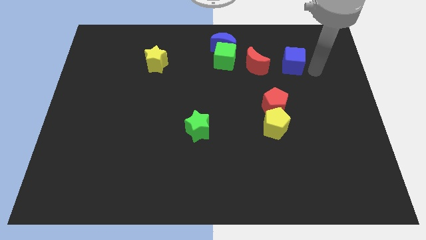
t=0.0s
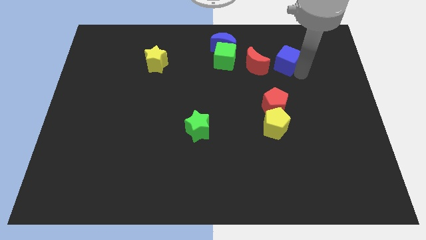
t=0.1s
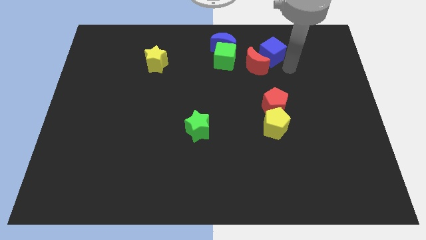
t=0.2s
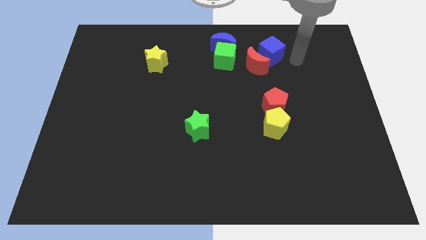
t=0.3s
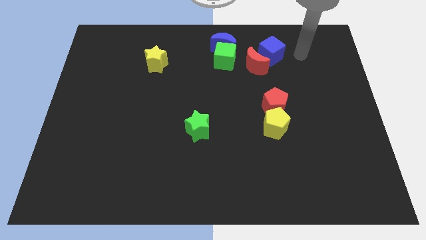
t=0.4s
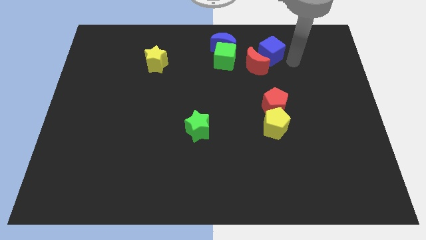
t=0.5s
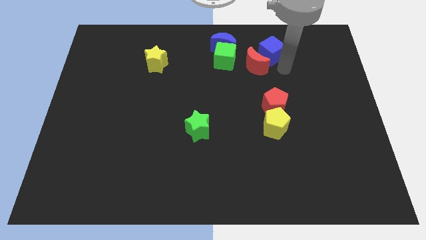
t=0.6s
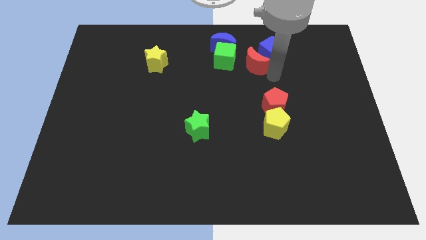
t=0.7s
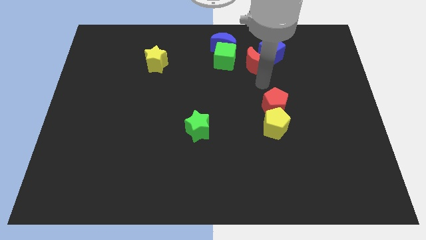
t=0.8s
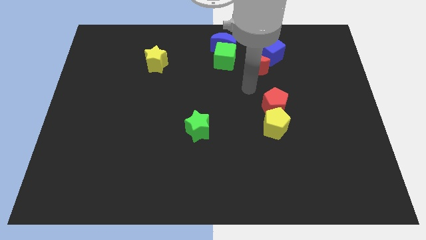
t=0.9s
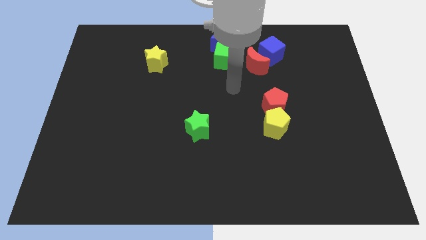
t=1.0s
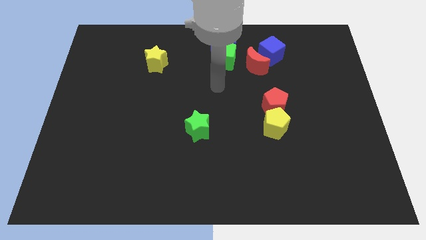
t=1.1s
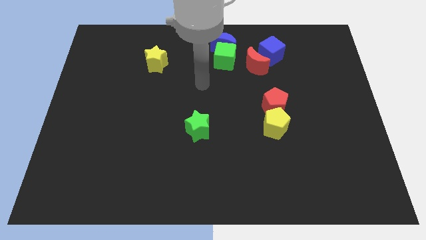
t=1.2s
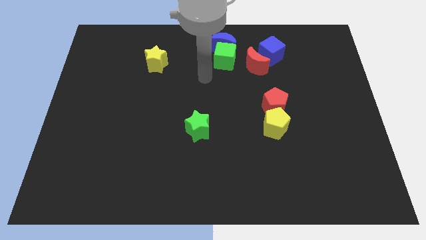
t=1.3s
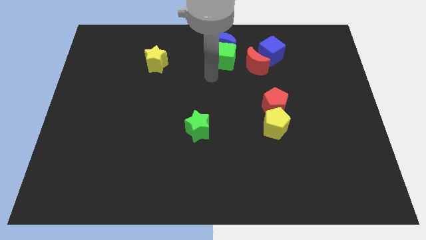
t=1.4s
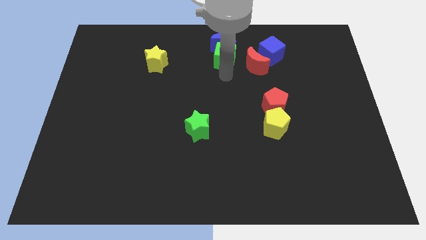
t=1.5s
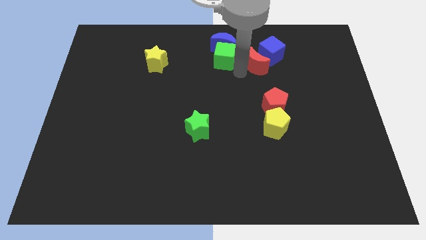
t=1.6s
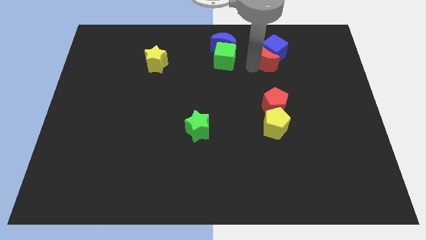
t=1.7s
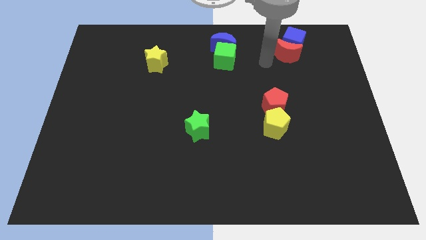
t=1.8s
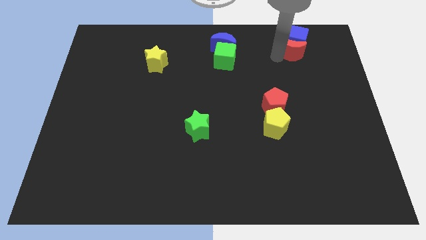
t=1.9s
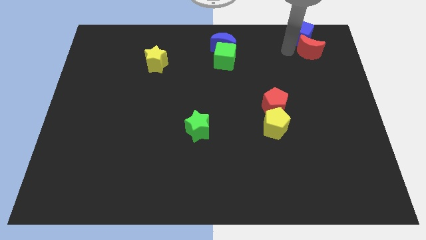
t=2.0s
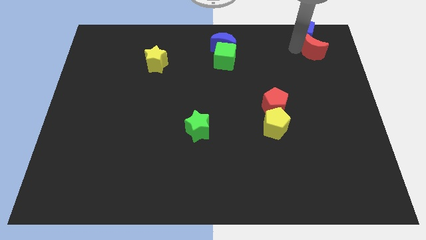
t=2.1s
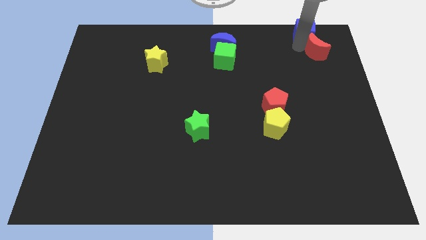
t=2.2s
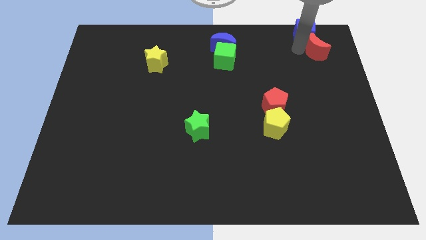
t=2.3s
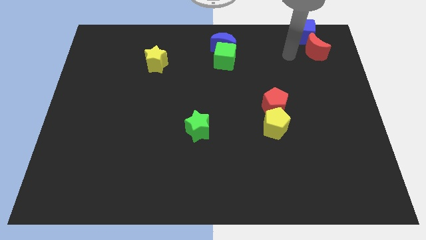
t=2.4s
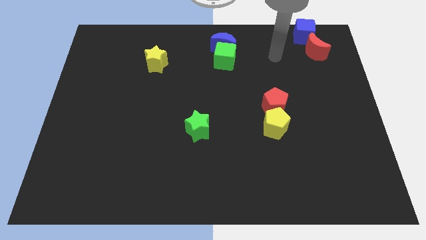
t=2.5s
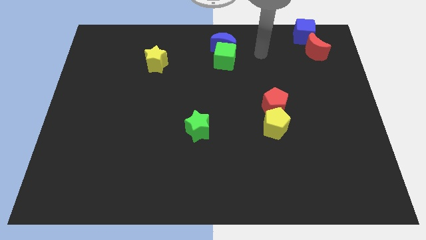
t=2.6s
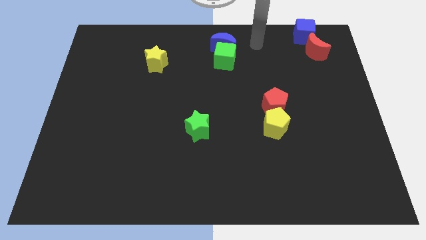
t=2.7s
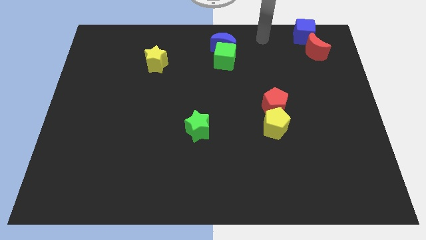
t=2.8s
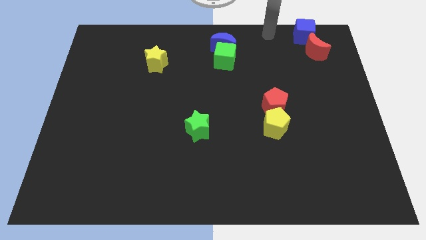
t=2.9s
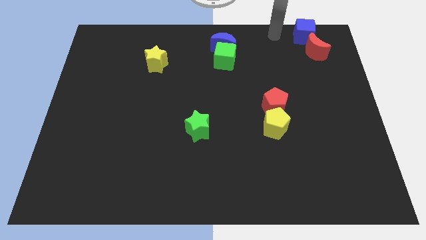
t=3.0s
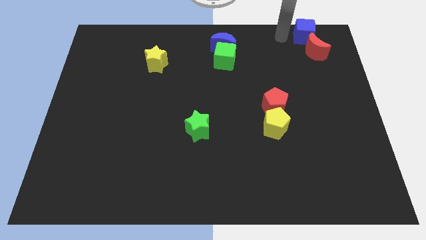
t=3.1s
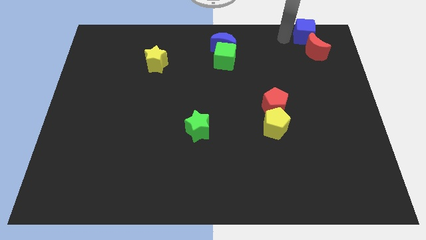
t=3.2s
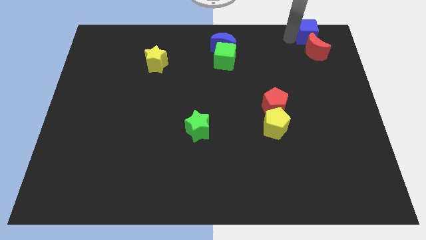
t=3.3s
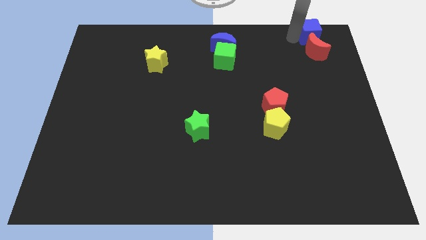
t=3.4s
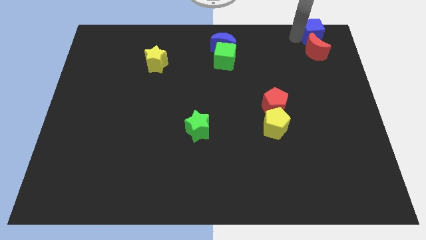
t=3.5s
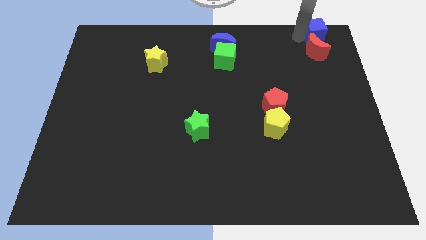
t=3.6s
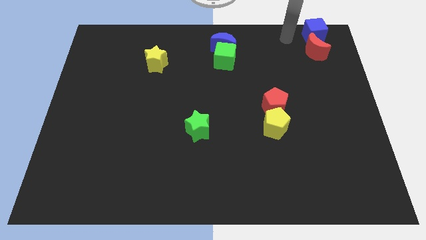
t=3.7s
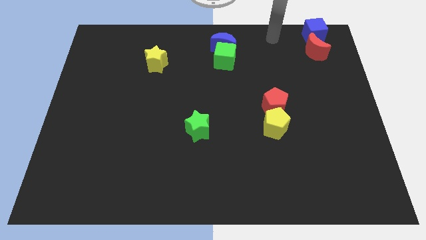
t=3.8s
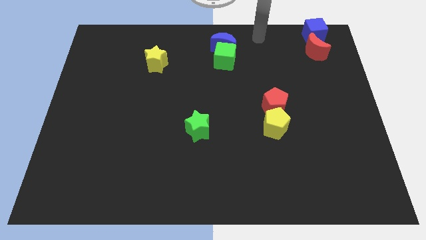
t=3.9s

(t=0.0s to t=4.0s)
move the blue cube and the red moon towards the top right of the board

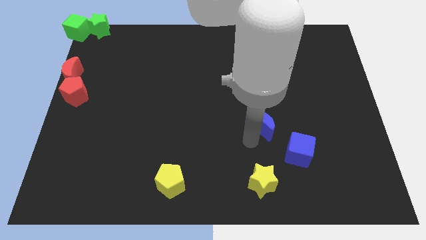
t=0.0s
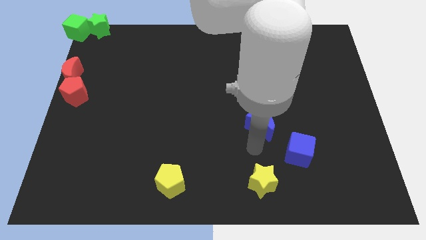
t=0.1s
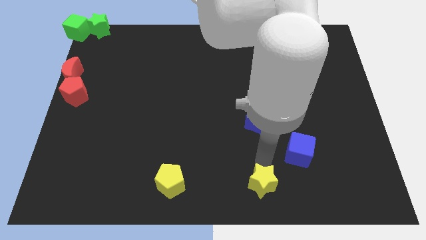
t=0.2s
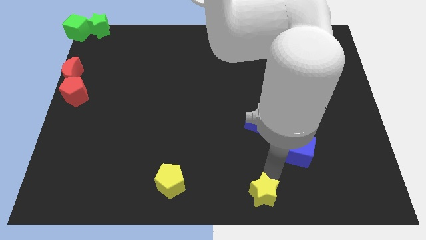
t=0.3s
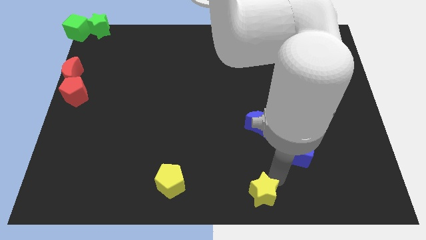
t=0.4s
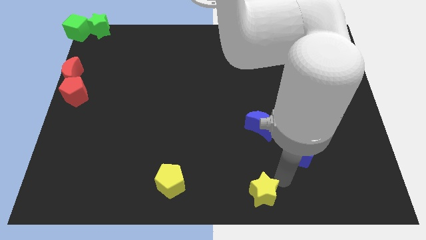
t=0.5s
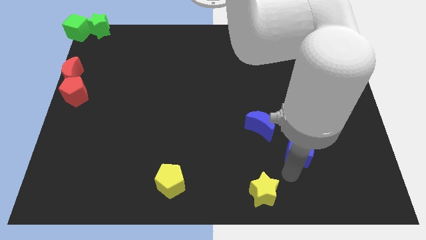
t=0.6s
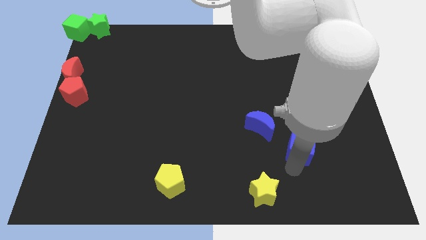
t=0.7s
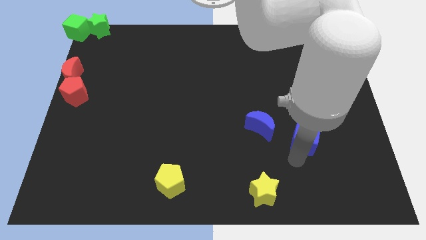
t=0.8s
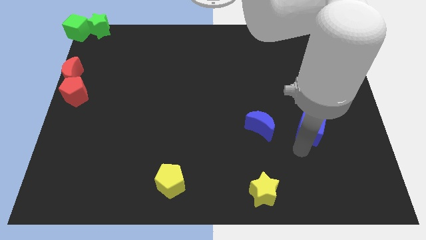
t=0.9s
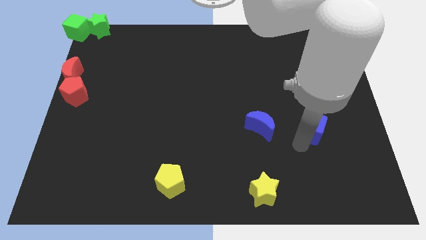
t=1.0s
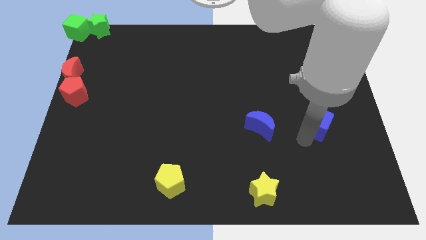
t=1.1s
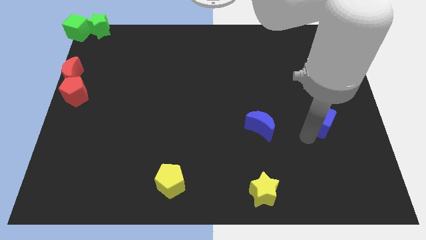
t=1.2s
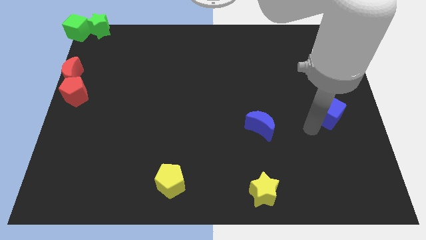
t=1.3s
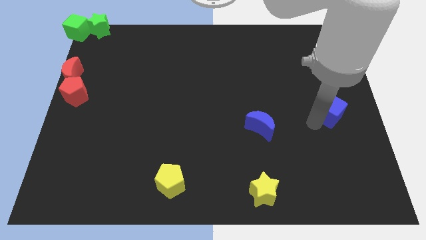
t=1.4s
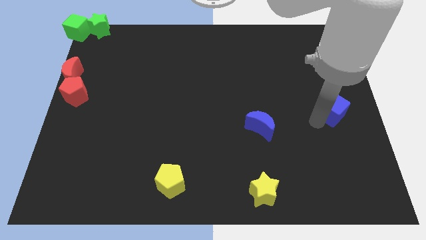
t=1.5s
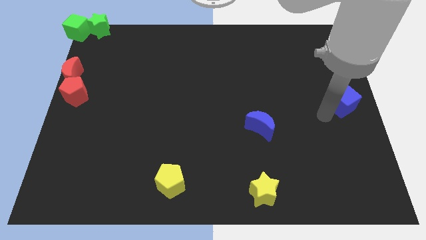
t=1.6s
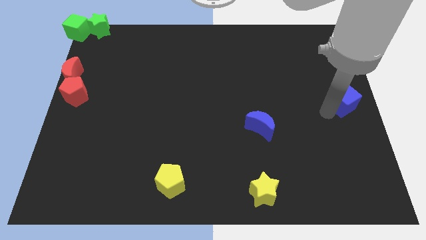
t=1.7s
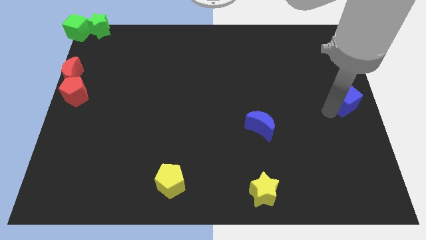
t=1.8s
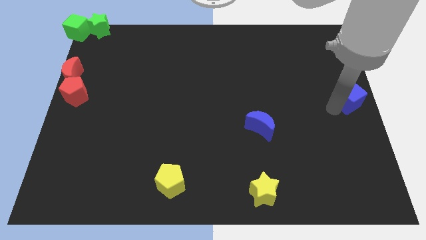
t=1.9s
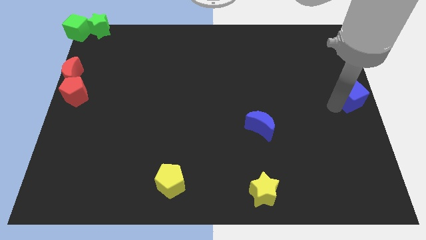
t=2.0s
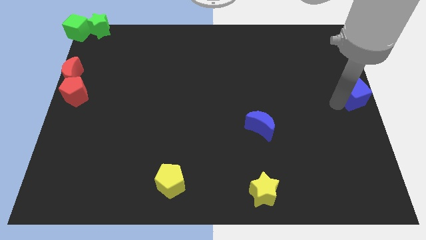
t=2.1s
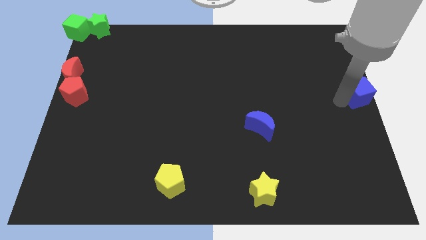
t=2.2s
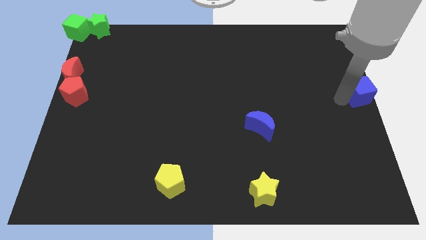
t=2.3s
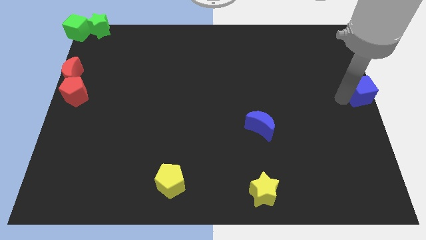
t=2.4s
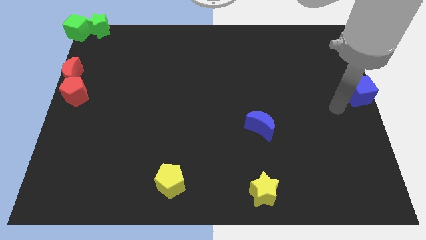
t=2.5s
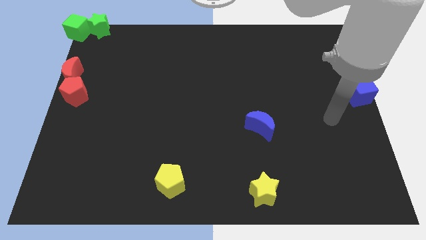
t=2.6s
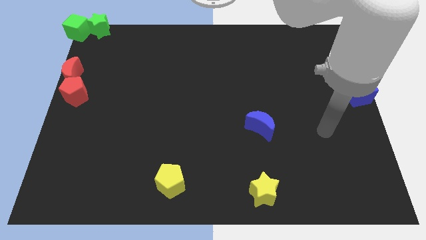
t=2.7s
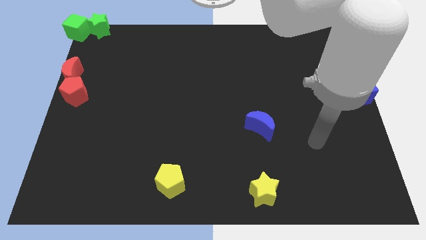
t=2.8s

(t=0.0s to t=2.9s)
move the blue cube to the right center of the board

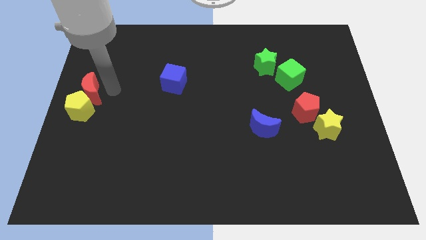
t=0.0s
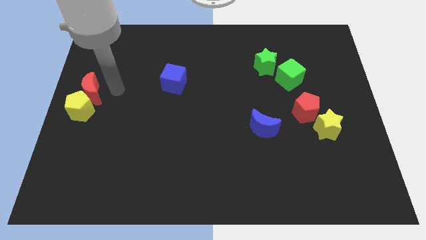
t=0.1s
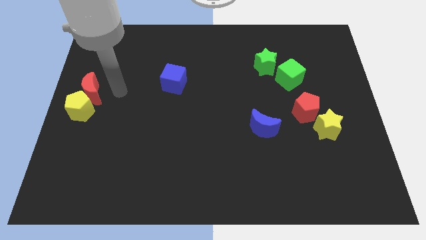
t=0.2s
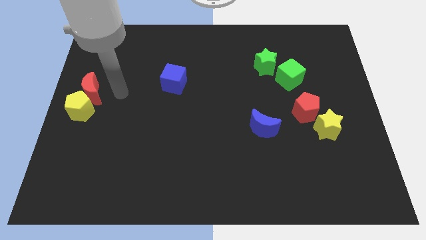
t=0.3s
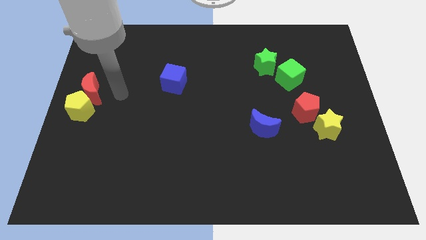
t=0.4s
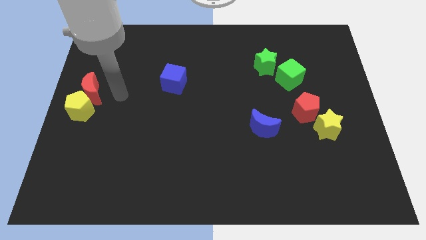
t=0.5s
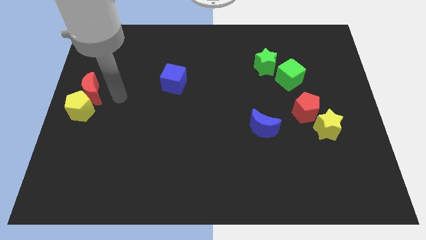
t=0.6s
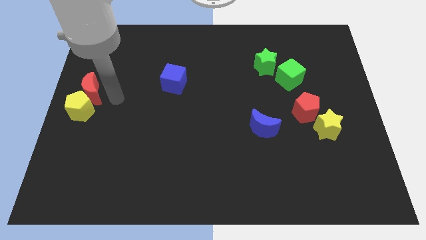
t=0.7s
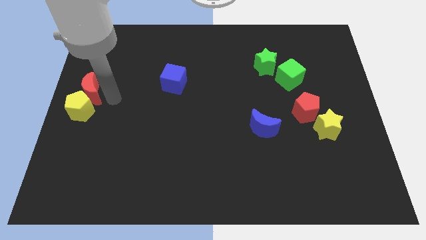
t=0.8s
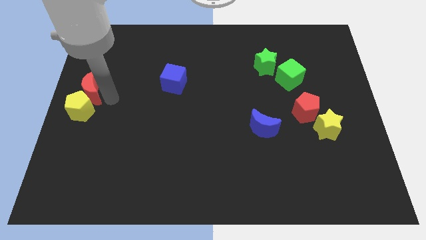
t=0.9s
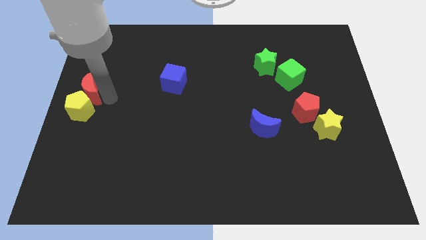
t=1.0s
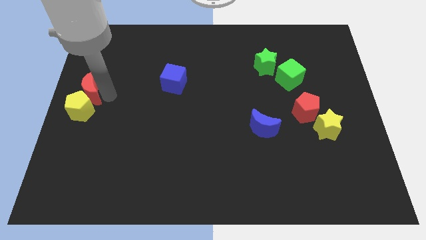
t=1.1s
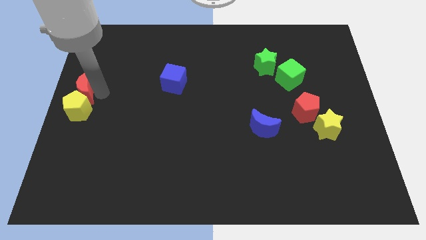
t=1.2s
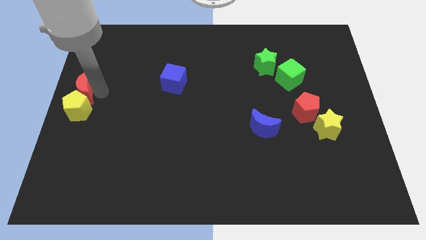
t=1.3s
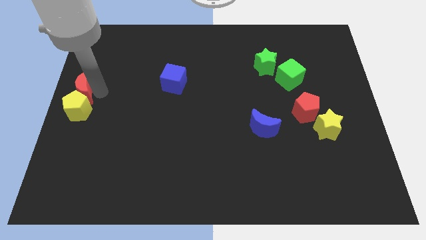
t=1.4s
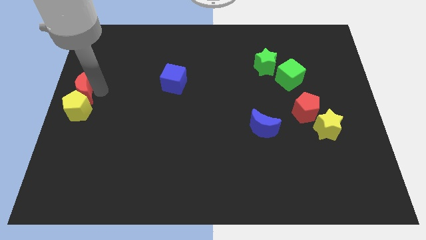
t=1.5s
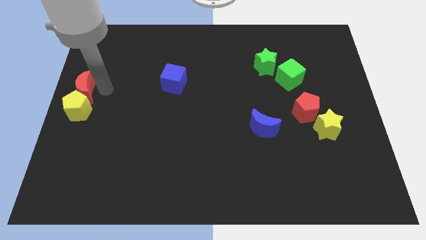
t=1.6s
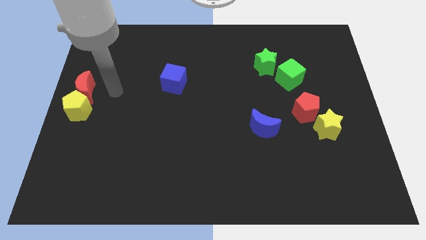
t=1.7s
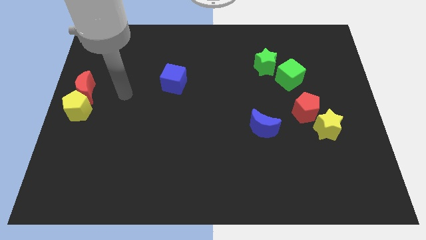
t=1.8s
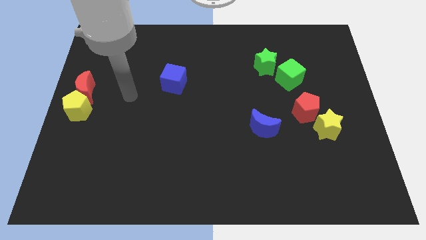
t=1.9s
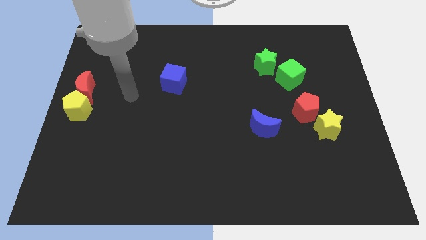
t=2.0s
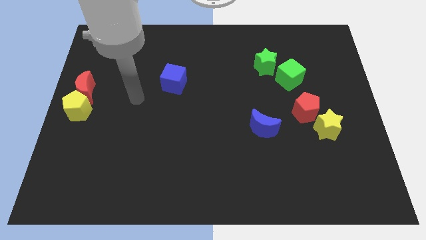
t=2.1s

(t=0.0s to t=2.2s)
slightly move the red crescent to the top of the yellow pentagon
